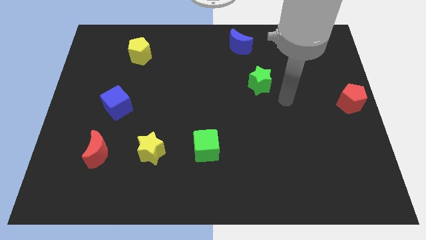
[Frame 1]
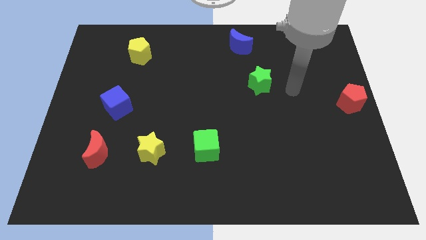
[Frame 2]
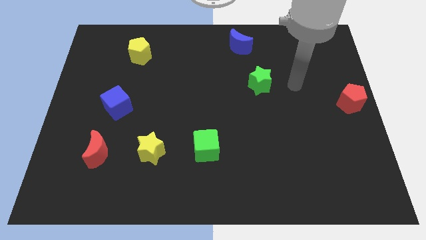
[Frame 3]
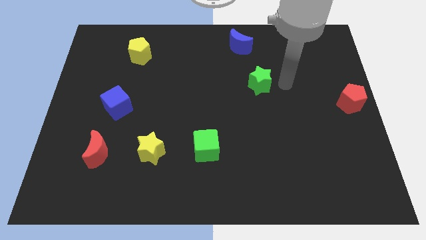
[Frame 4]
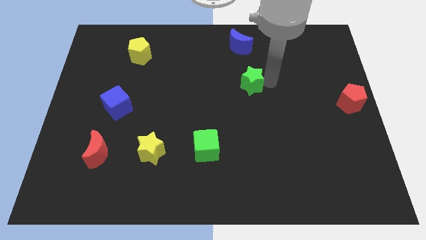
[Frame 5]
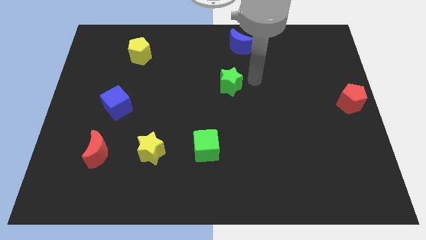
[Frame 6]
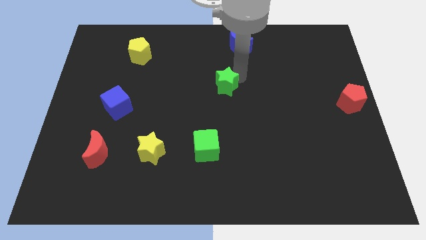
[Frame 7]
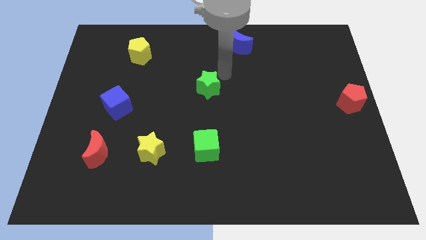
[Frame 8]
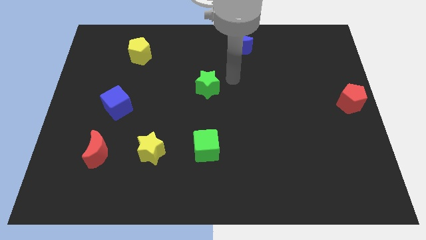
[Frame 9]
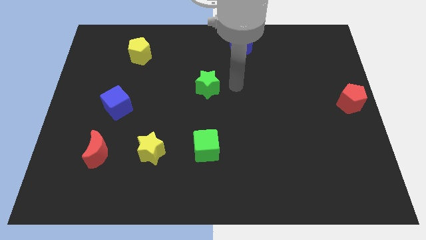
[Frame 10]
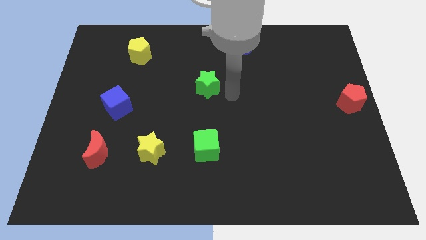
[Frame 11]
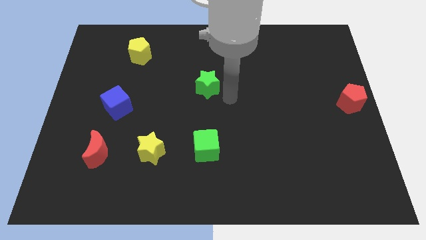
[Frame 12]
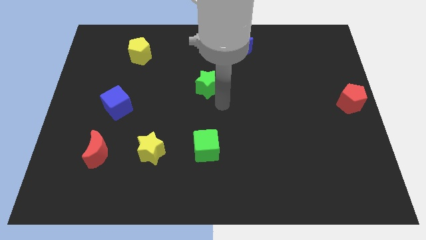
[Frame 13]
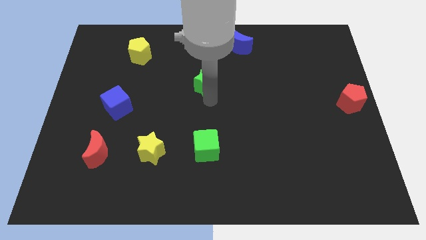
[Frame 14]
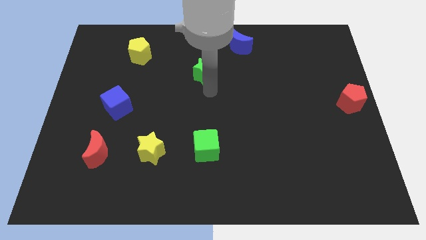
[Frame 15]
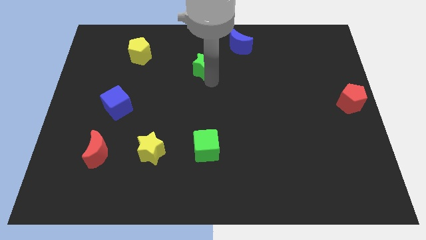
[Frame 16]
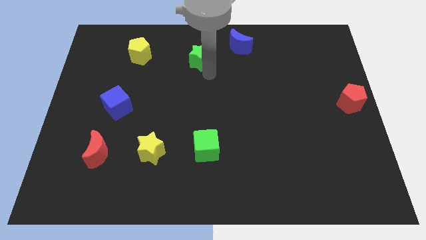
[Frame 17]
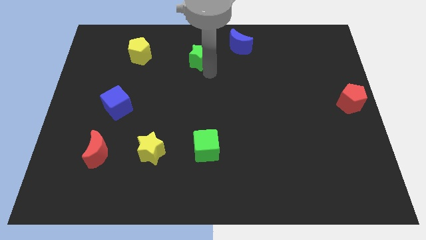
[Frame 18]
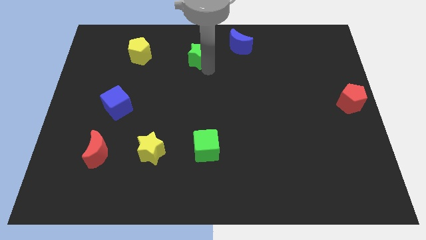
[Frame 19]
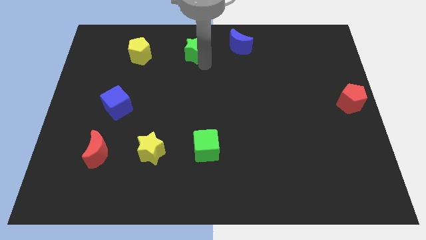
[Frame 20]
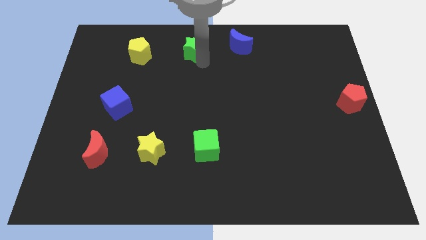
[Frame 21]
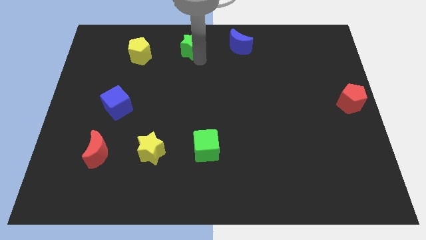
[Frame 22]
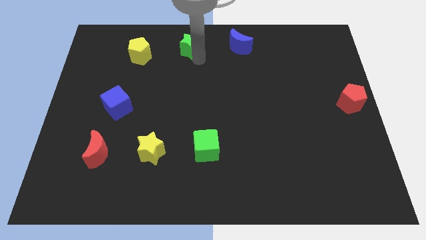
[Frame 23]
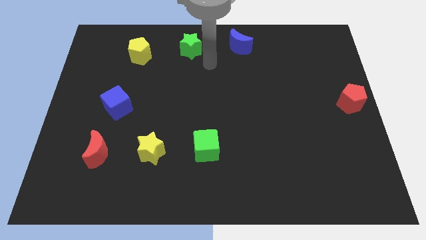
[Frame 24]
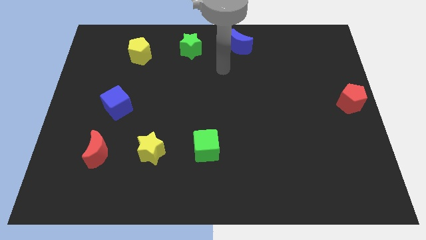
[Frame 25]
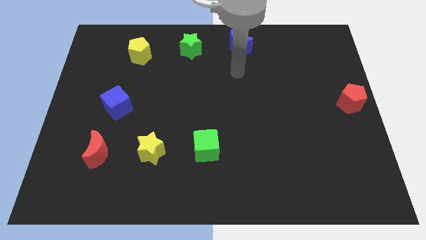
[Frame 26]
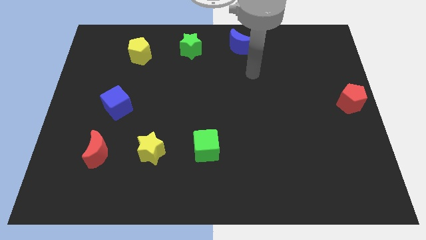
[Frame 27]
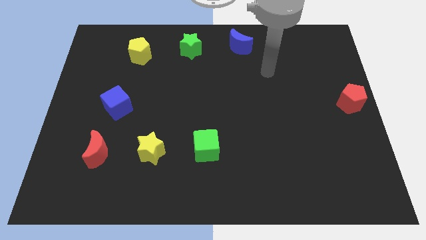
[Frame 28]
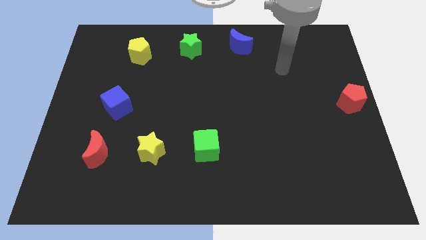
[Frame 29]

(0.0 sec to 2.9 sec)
move the green star towards the top side of the board

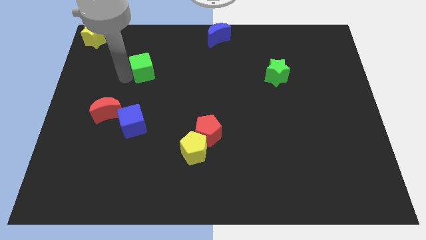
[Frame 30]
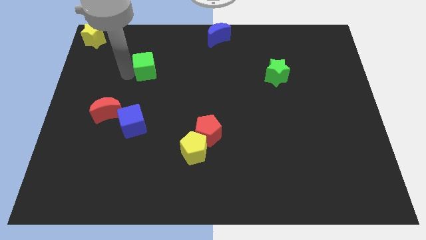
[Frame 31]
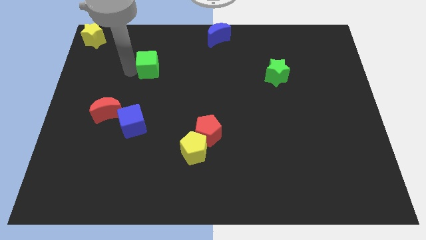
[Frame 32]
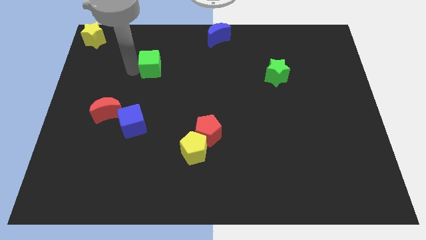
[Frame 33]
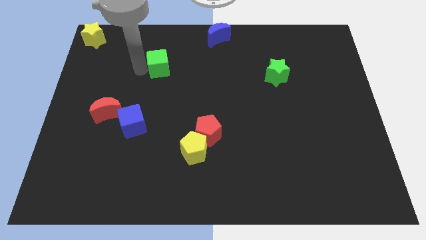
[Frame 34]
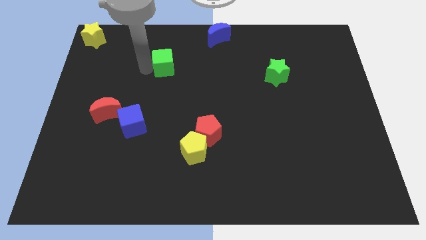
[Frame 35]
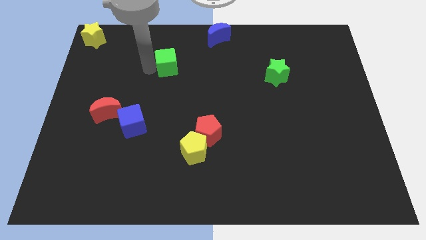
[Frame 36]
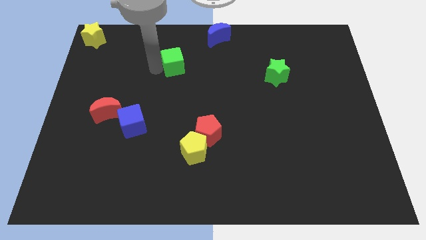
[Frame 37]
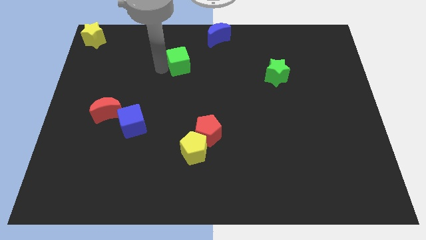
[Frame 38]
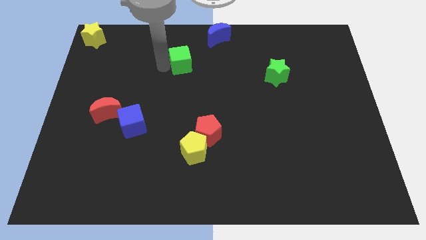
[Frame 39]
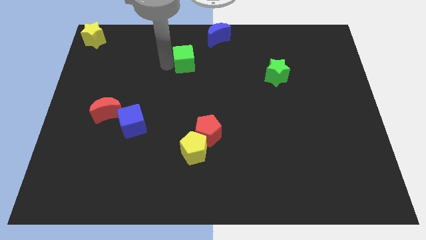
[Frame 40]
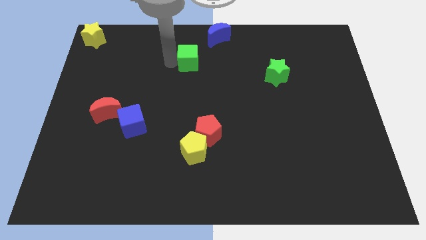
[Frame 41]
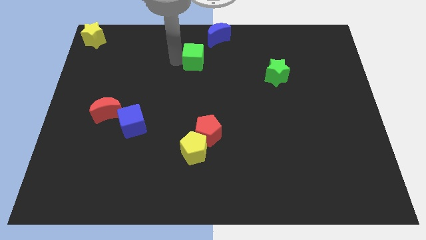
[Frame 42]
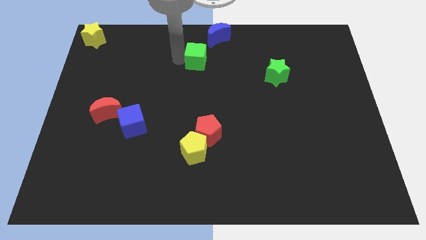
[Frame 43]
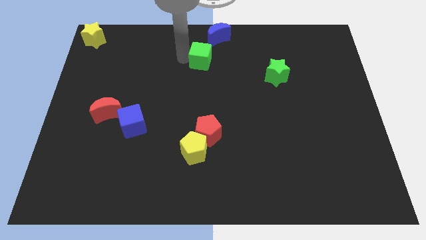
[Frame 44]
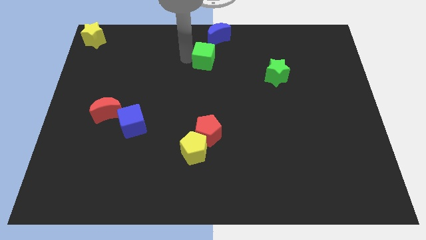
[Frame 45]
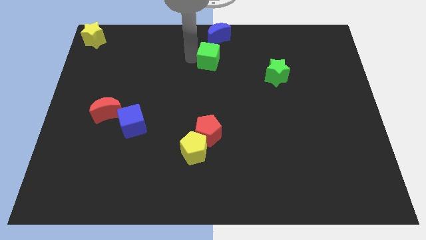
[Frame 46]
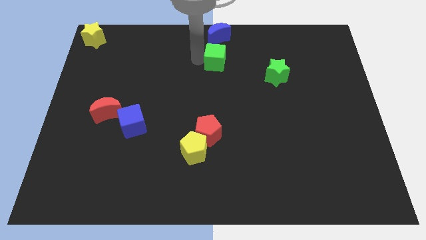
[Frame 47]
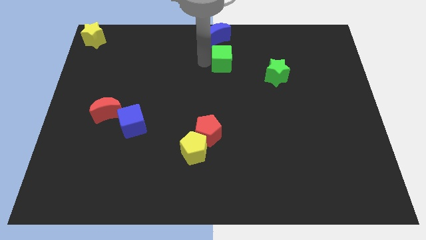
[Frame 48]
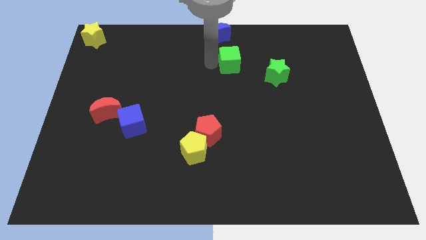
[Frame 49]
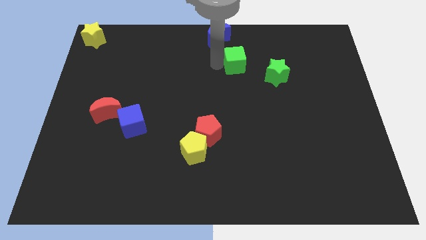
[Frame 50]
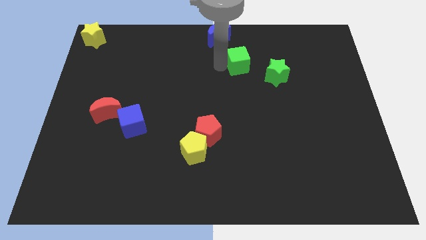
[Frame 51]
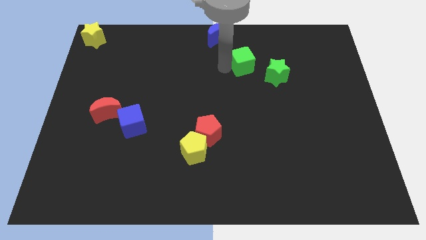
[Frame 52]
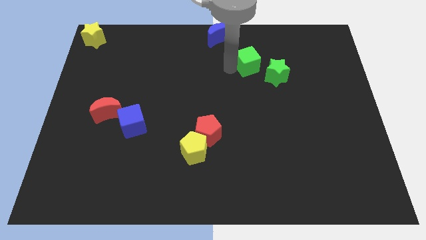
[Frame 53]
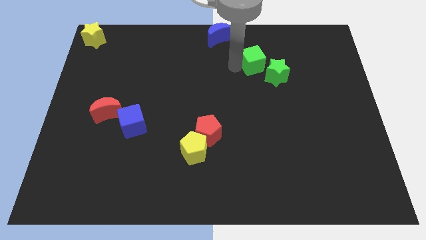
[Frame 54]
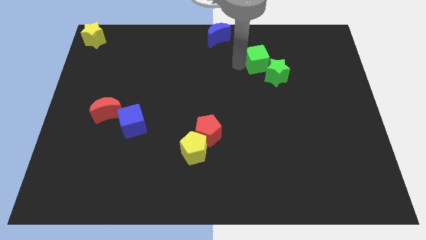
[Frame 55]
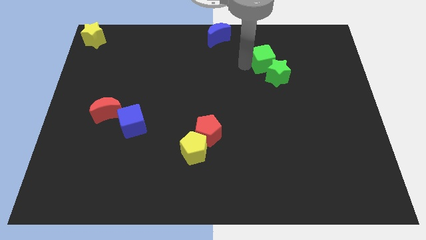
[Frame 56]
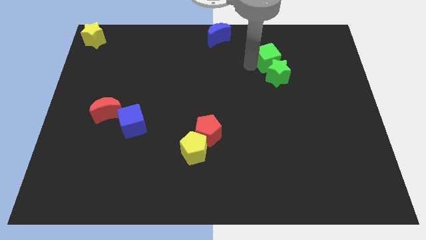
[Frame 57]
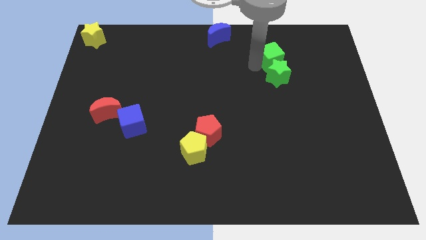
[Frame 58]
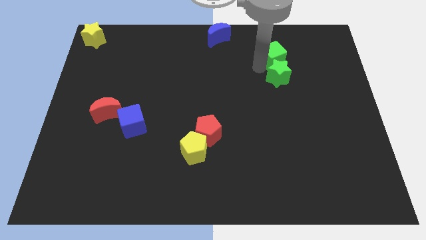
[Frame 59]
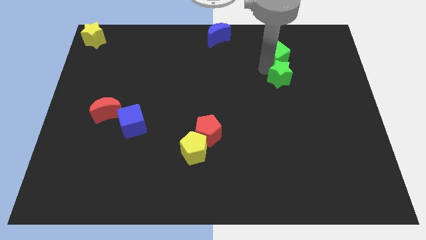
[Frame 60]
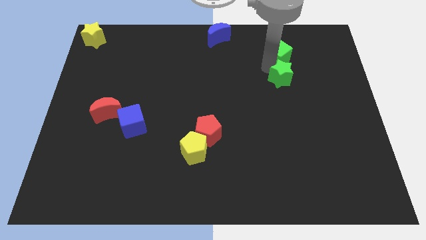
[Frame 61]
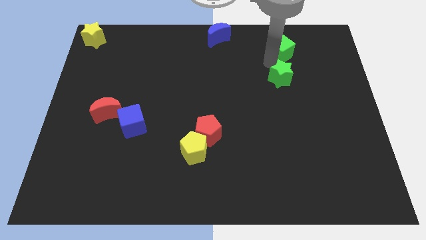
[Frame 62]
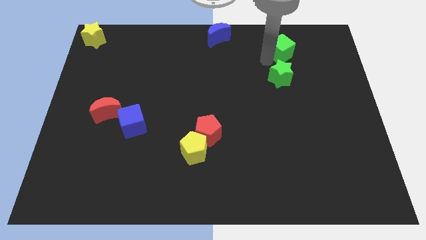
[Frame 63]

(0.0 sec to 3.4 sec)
place the green cube to the top side of the green star

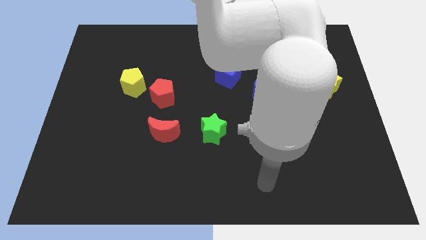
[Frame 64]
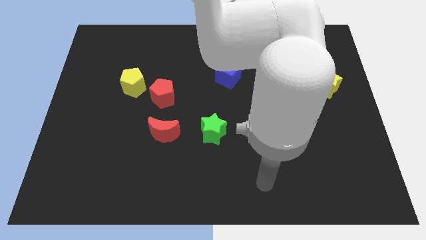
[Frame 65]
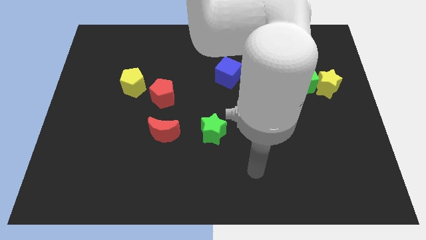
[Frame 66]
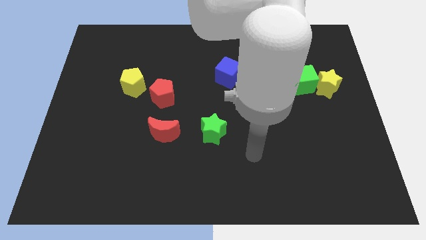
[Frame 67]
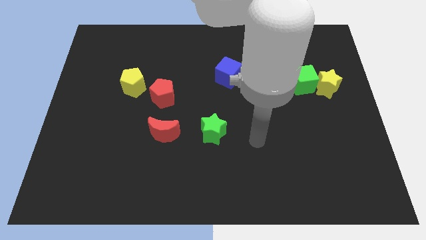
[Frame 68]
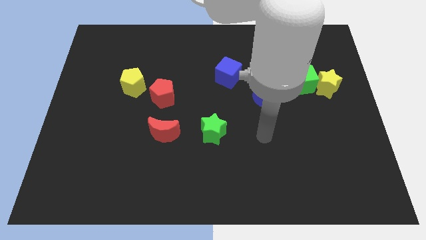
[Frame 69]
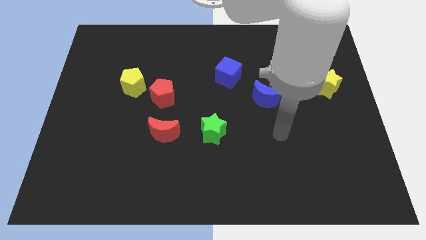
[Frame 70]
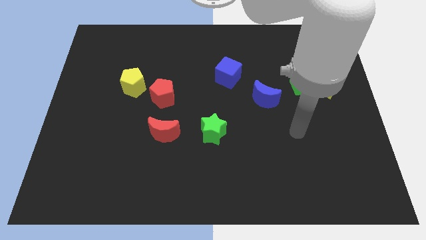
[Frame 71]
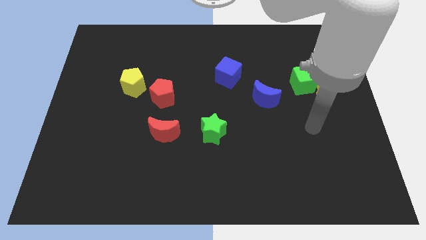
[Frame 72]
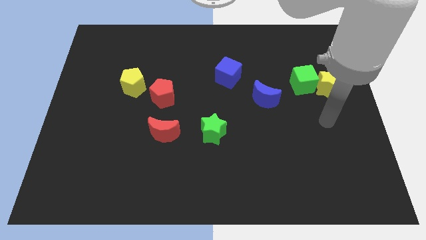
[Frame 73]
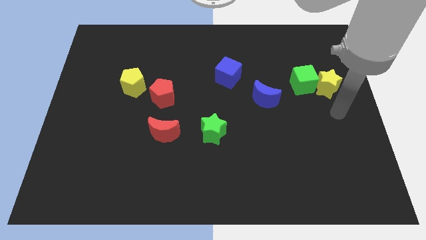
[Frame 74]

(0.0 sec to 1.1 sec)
move arm to the bottom side of the yellow star

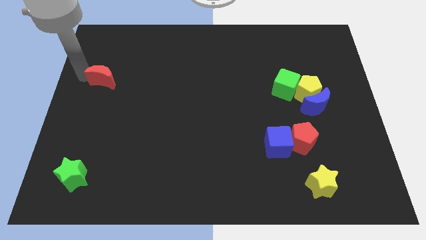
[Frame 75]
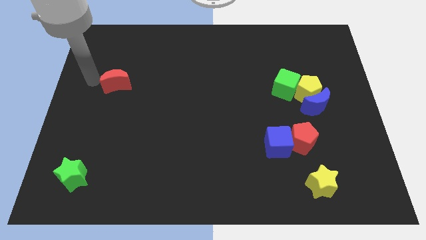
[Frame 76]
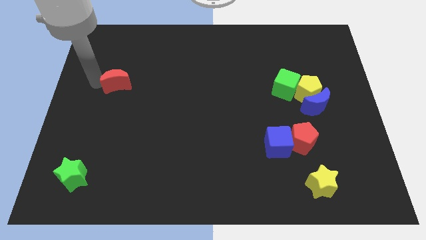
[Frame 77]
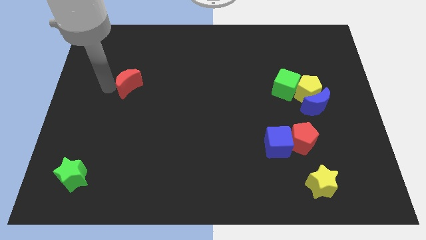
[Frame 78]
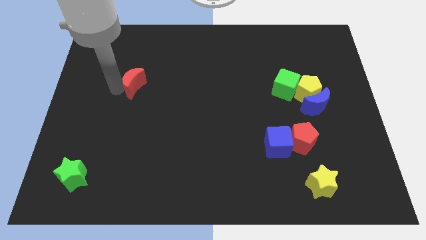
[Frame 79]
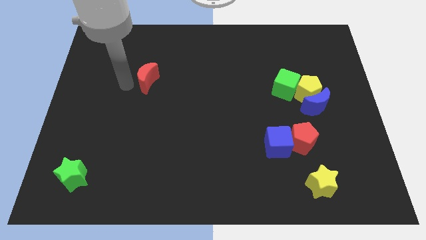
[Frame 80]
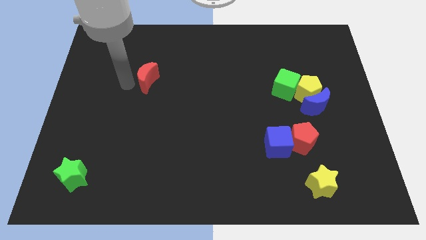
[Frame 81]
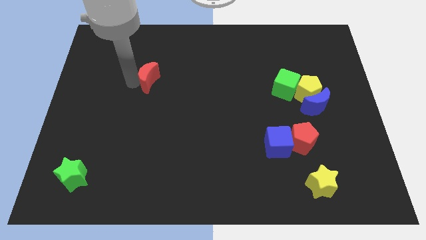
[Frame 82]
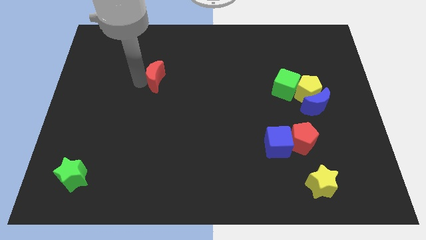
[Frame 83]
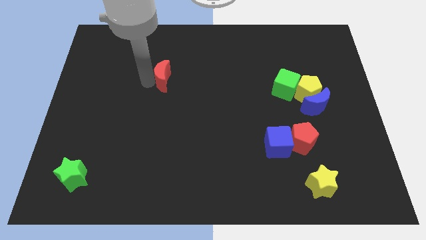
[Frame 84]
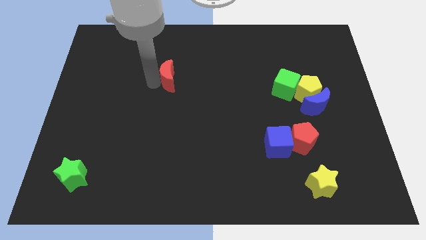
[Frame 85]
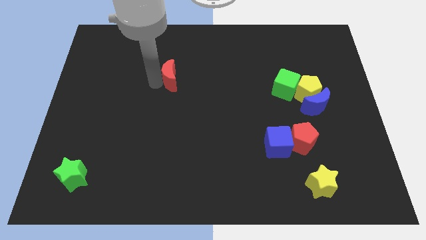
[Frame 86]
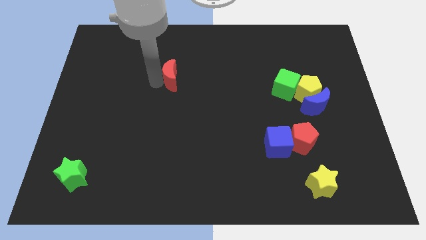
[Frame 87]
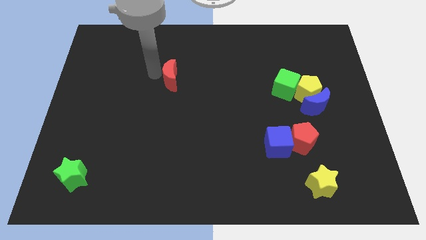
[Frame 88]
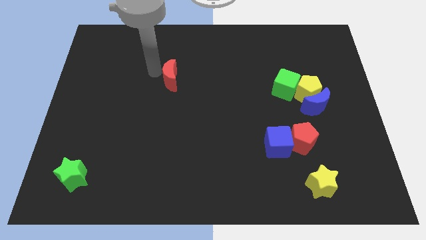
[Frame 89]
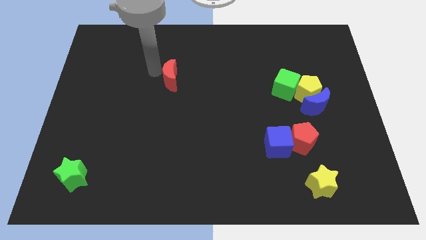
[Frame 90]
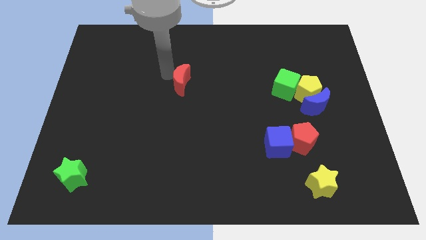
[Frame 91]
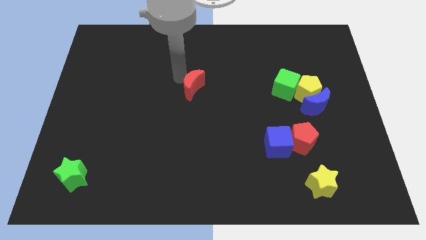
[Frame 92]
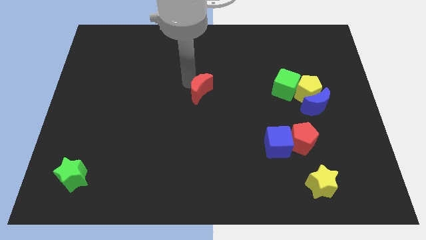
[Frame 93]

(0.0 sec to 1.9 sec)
push red crescent to the center of the board
